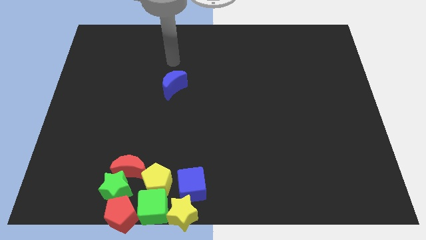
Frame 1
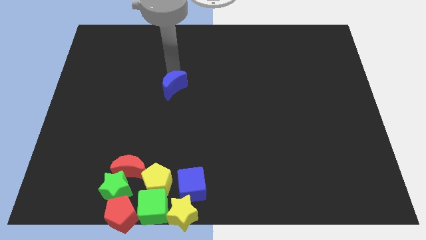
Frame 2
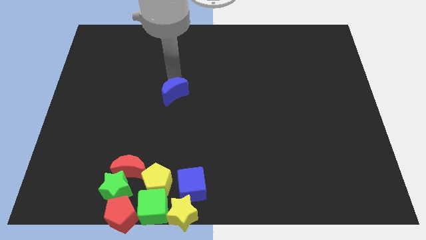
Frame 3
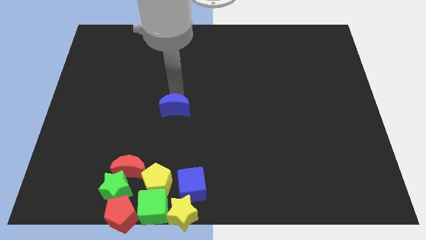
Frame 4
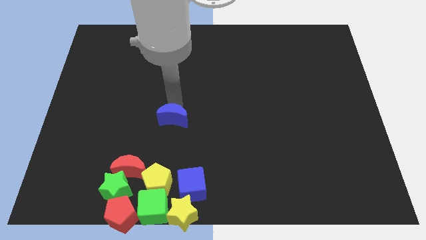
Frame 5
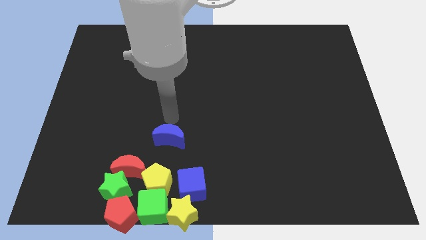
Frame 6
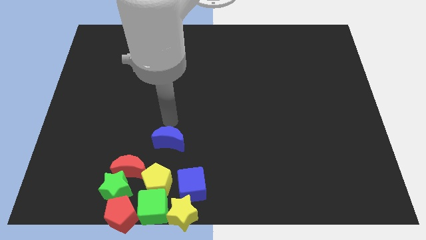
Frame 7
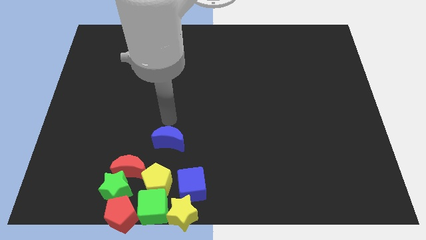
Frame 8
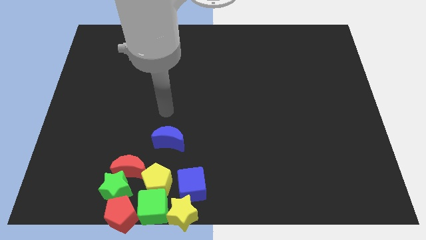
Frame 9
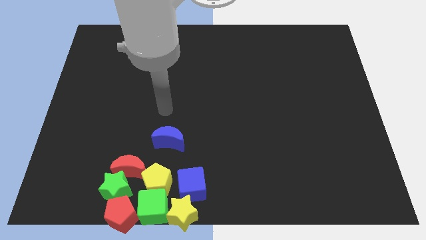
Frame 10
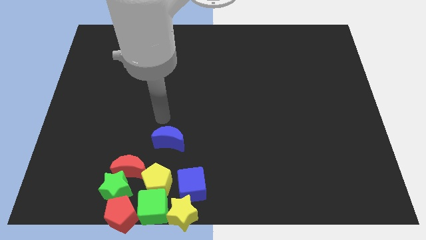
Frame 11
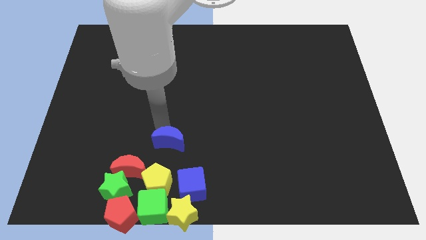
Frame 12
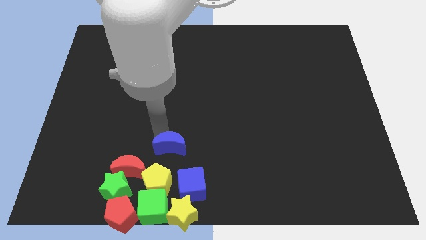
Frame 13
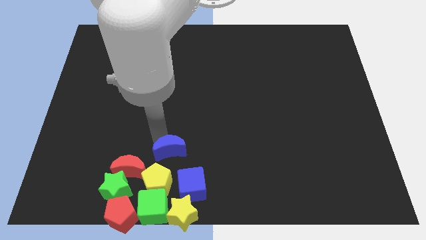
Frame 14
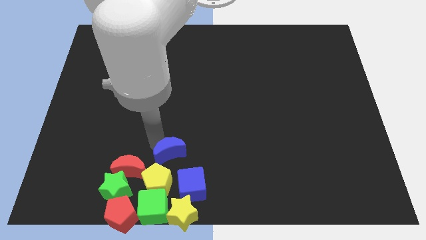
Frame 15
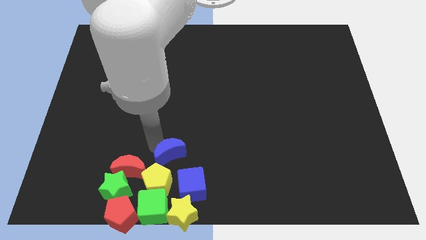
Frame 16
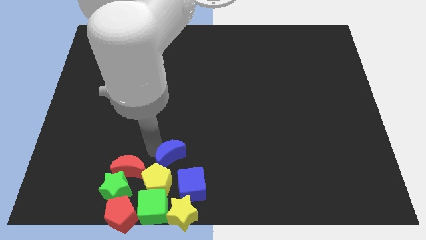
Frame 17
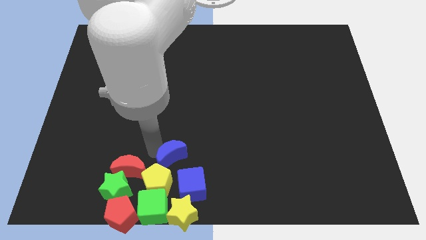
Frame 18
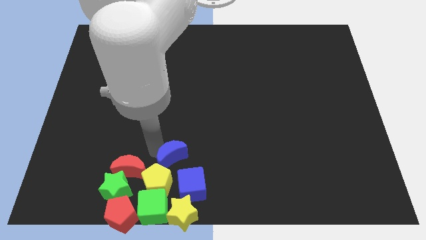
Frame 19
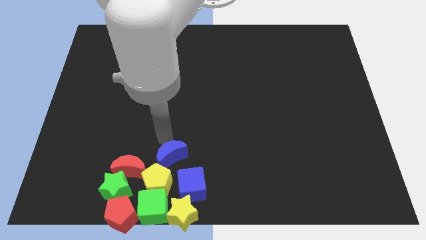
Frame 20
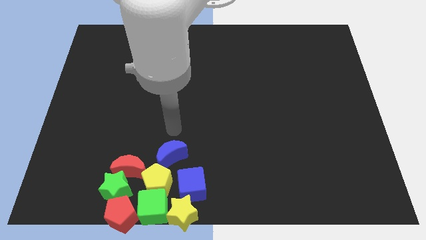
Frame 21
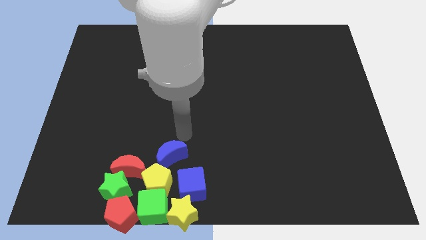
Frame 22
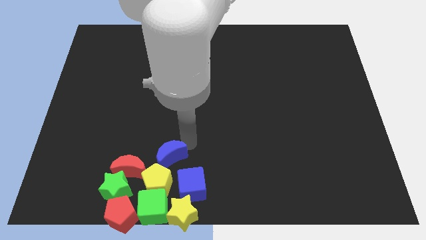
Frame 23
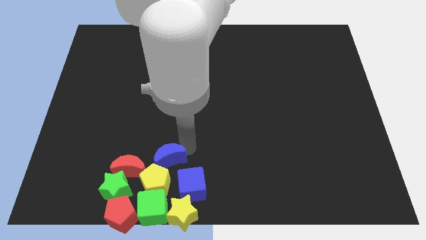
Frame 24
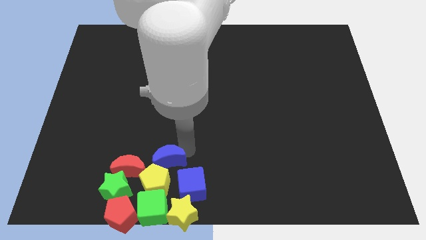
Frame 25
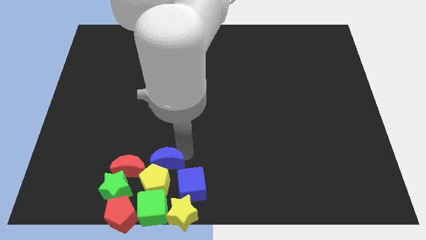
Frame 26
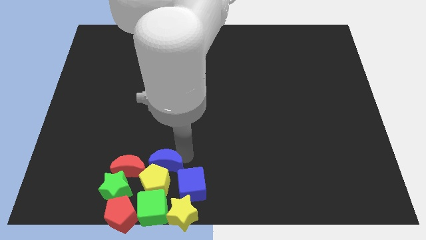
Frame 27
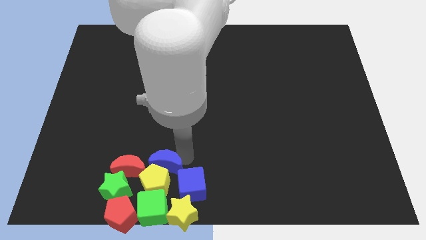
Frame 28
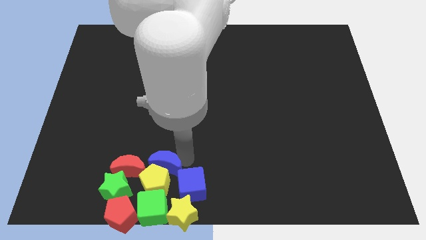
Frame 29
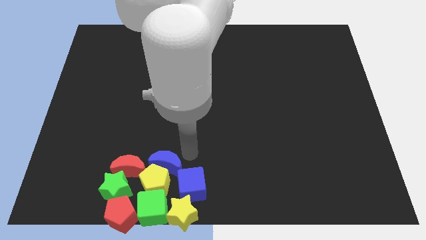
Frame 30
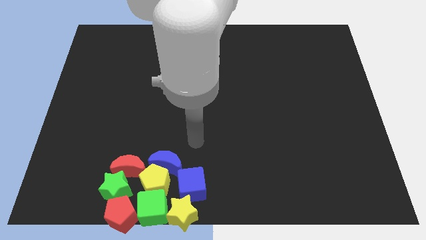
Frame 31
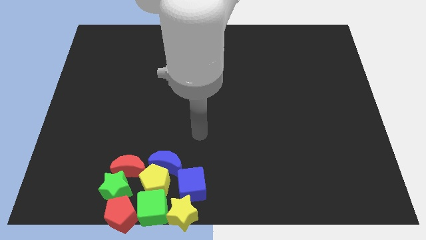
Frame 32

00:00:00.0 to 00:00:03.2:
add the blue crescent to the group of blocks

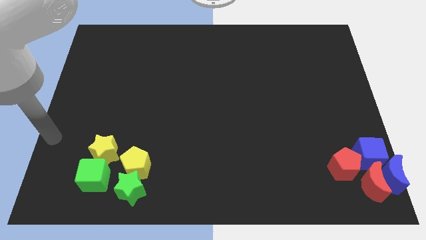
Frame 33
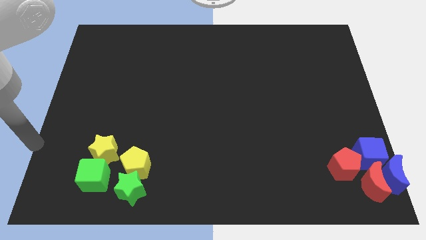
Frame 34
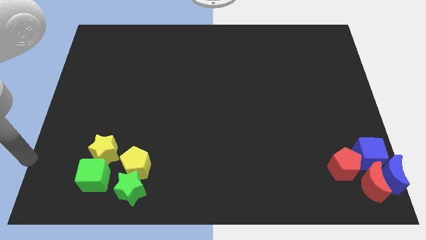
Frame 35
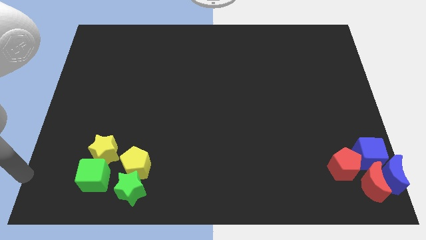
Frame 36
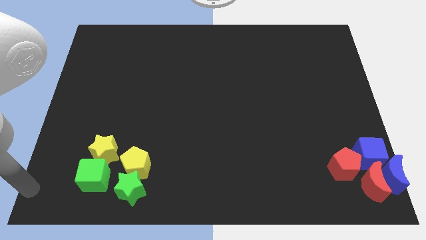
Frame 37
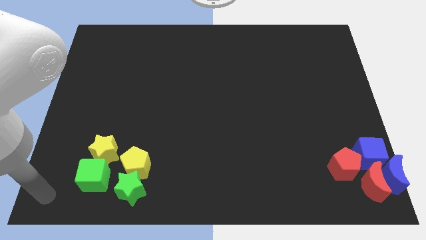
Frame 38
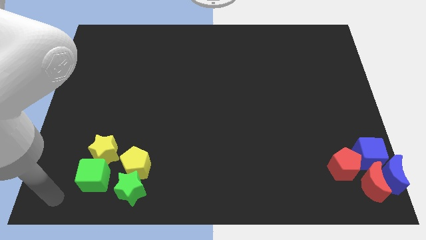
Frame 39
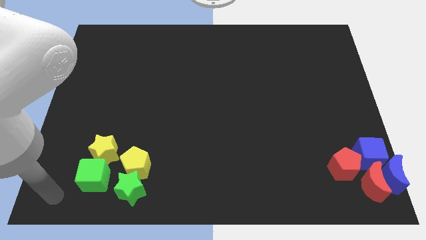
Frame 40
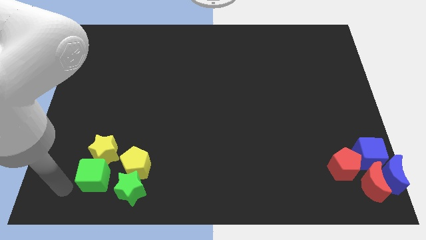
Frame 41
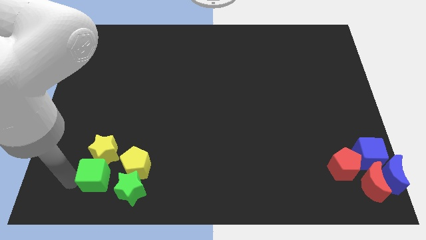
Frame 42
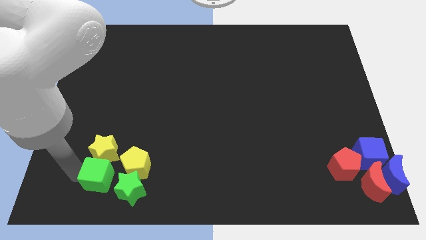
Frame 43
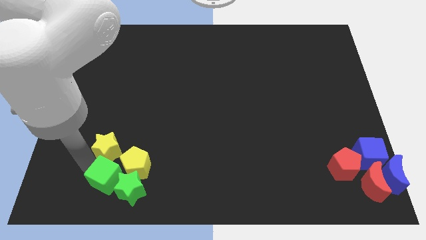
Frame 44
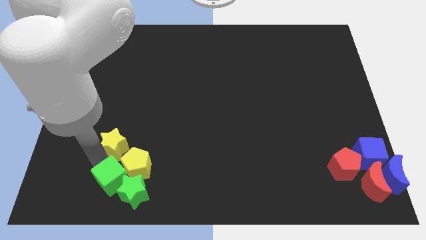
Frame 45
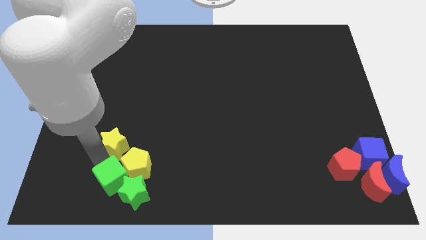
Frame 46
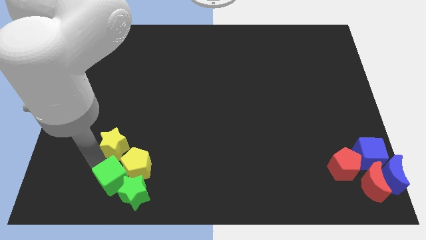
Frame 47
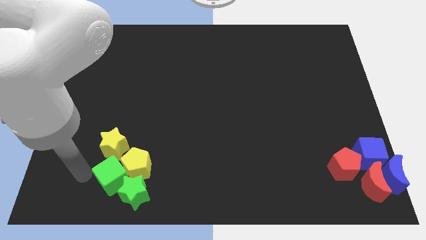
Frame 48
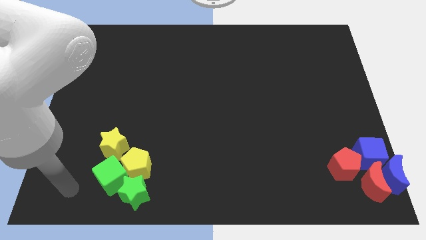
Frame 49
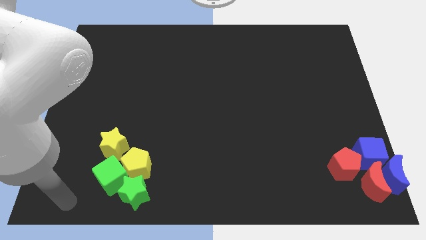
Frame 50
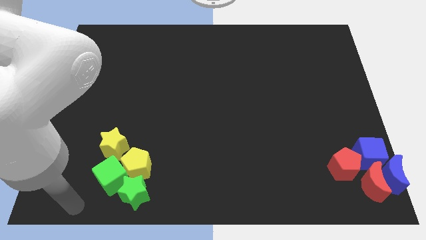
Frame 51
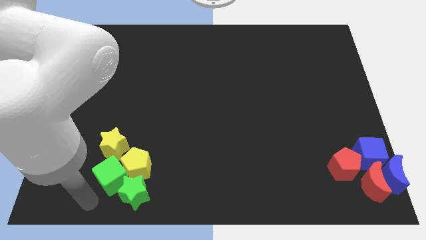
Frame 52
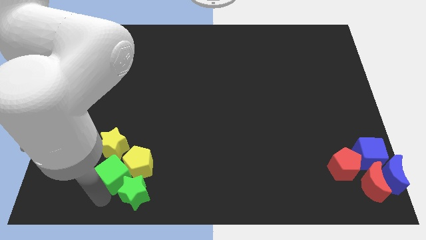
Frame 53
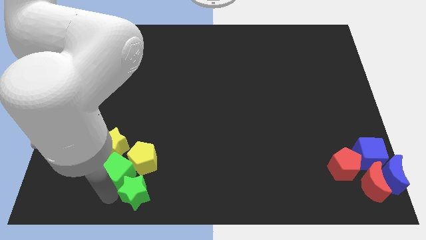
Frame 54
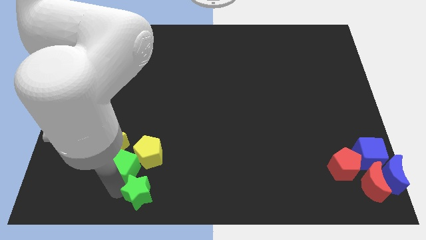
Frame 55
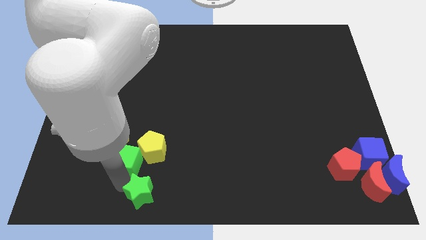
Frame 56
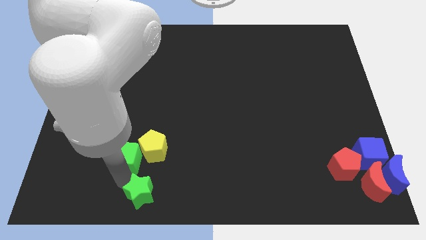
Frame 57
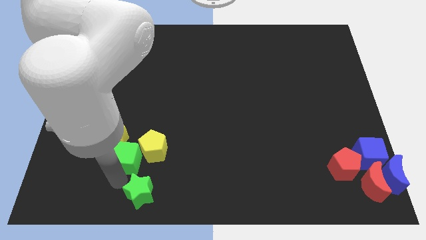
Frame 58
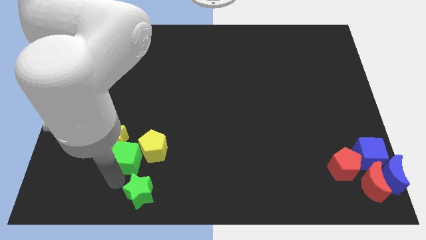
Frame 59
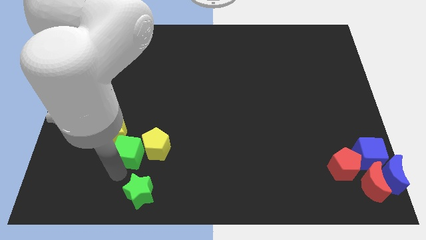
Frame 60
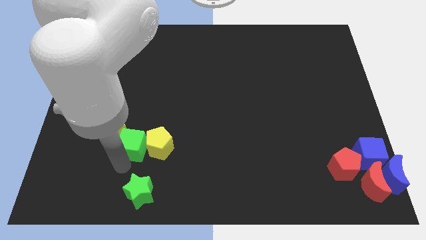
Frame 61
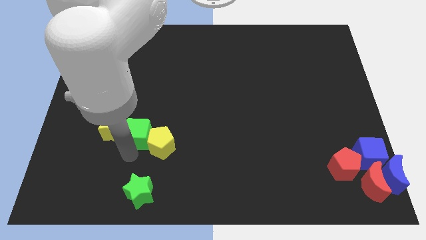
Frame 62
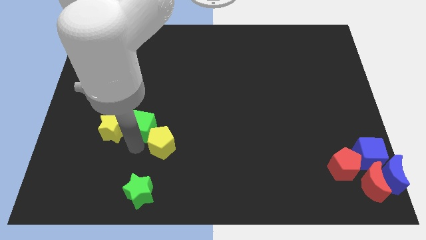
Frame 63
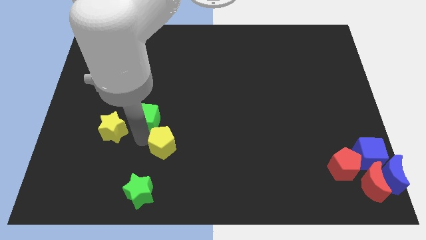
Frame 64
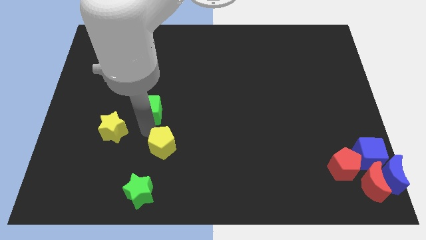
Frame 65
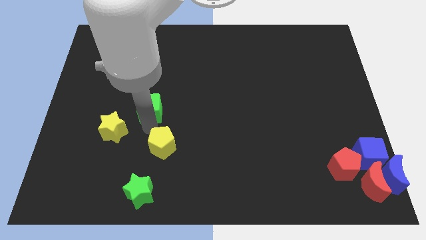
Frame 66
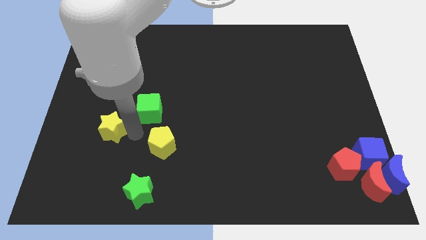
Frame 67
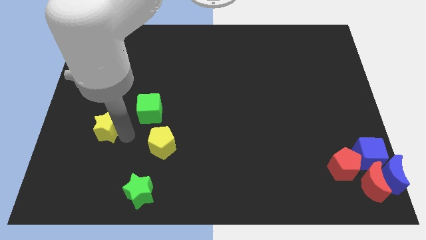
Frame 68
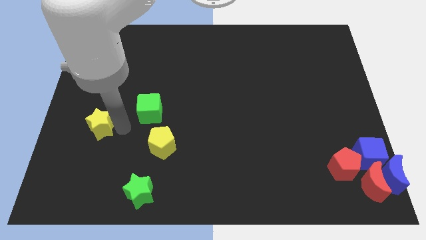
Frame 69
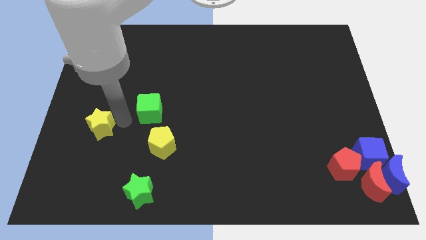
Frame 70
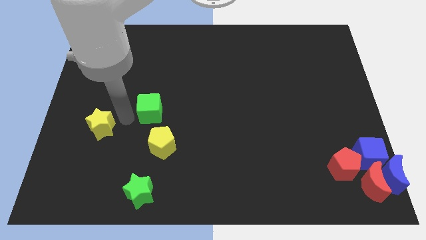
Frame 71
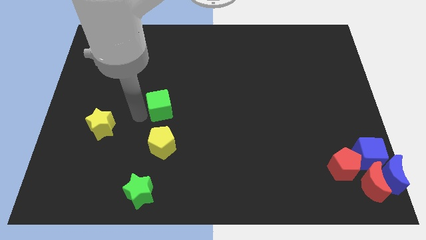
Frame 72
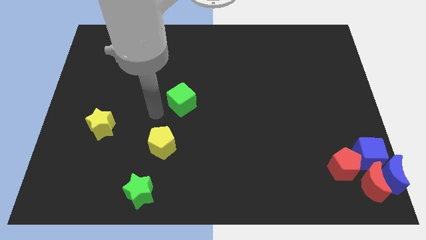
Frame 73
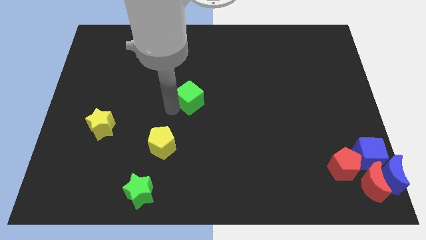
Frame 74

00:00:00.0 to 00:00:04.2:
separate yellow and green blocks

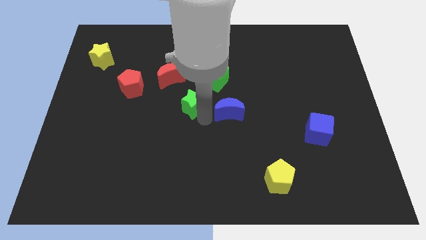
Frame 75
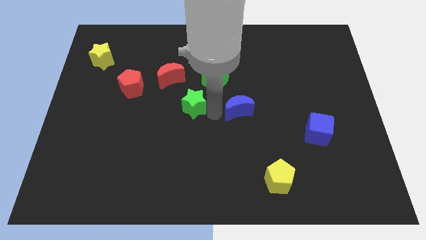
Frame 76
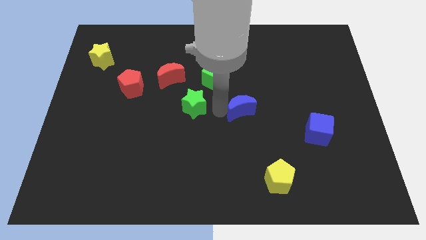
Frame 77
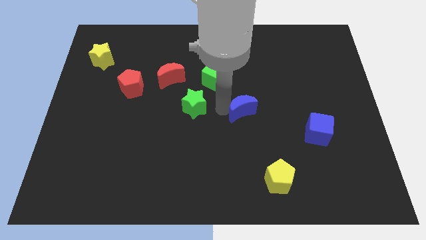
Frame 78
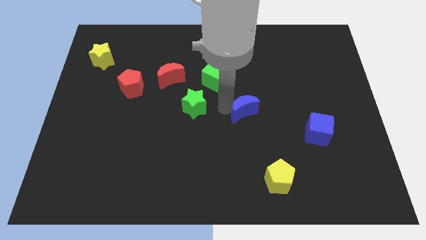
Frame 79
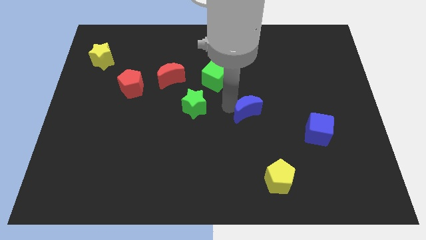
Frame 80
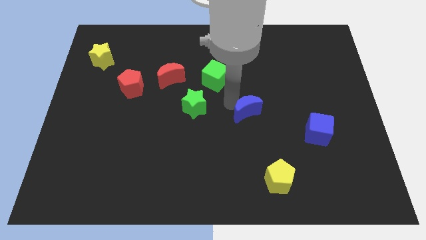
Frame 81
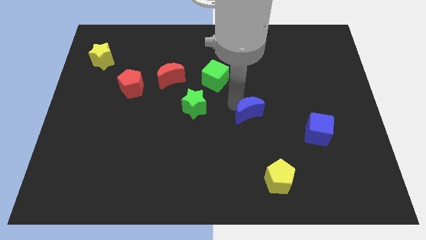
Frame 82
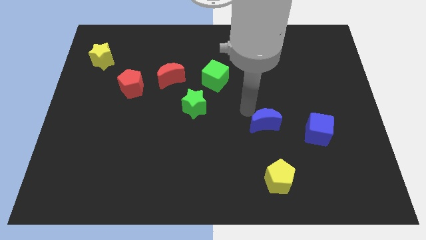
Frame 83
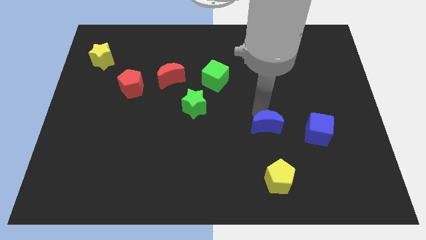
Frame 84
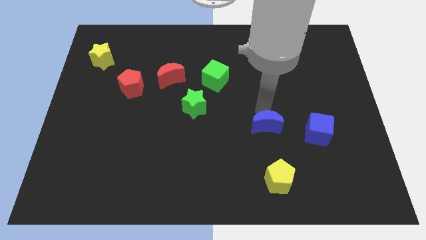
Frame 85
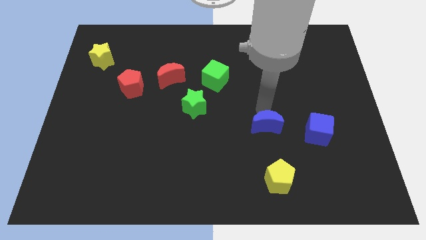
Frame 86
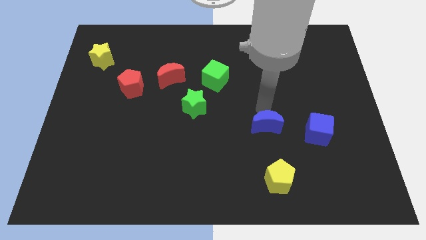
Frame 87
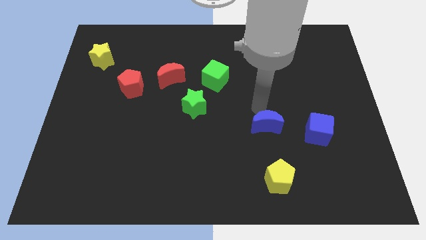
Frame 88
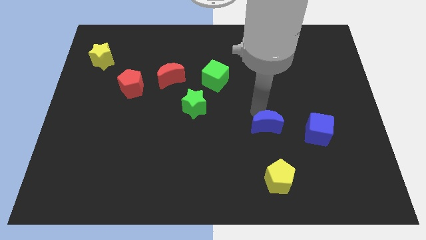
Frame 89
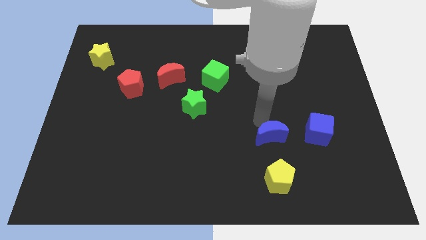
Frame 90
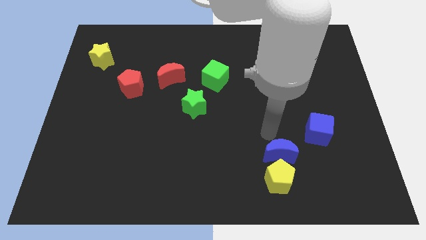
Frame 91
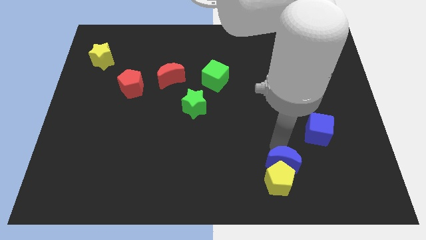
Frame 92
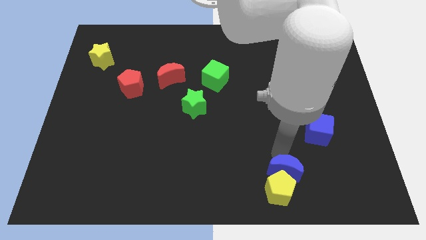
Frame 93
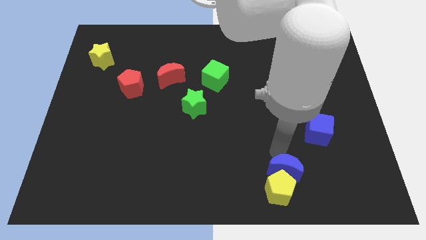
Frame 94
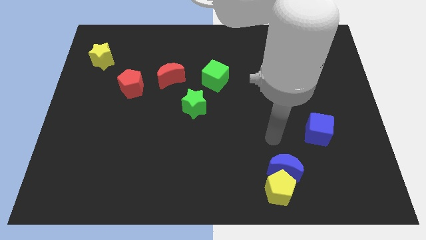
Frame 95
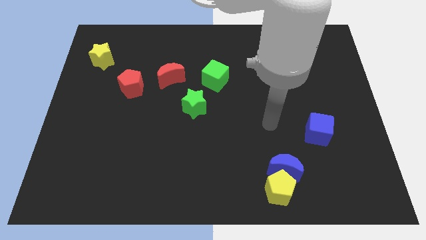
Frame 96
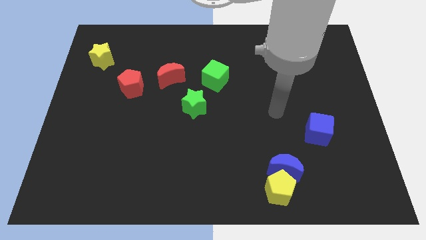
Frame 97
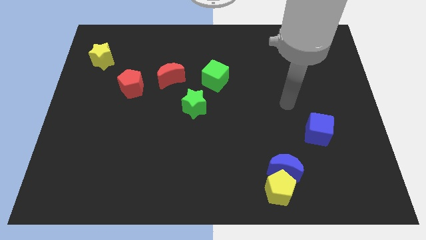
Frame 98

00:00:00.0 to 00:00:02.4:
place the blue crescent to the top of the yellow pentagon
